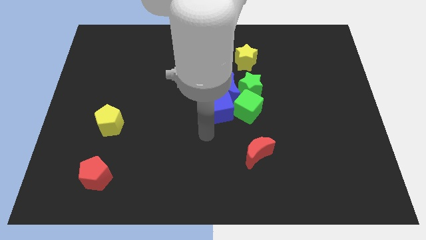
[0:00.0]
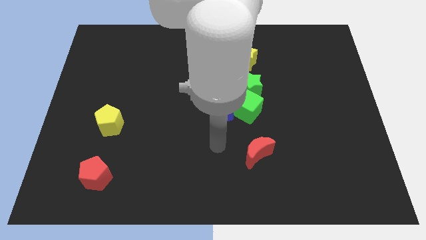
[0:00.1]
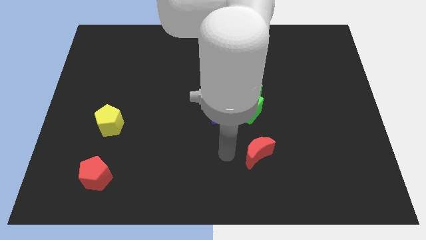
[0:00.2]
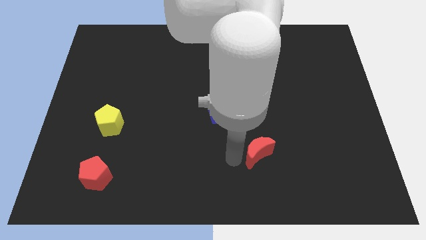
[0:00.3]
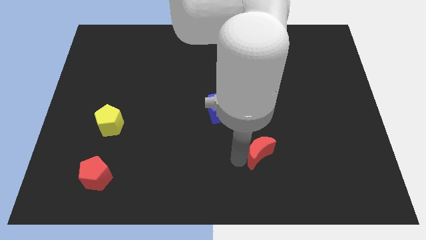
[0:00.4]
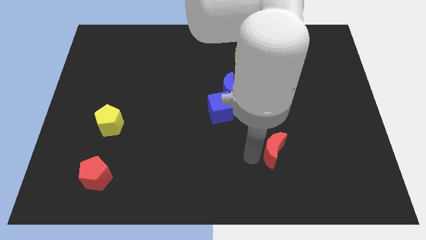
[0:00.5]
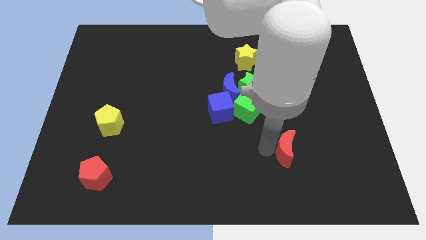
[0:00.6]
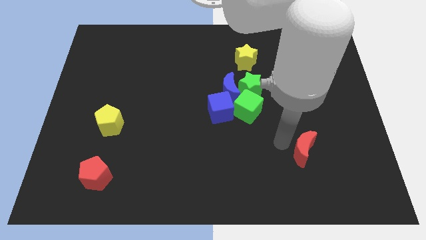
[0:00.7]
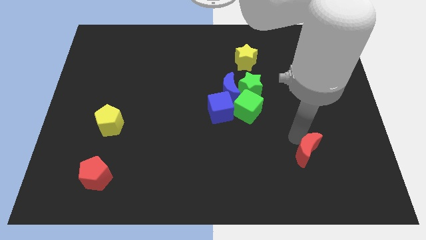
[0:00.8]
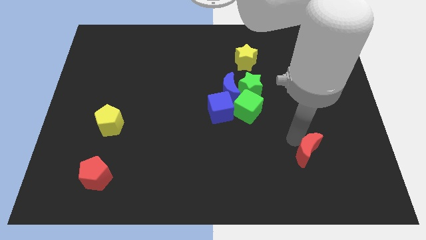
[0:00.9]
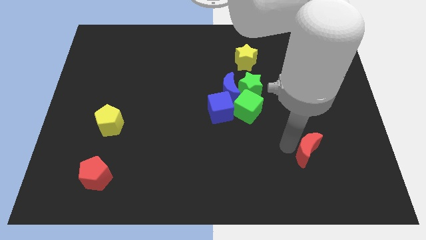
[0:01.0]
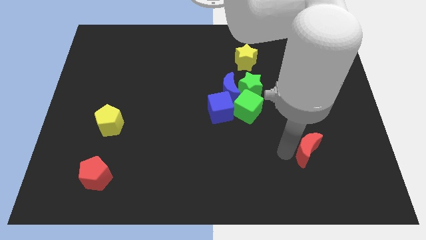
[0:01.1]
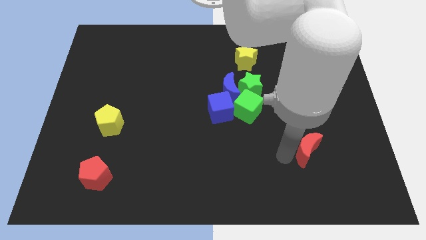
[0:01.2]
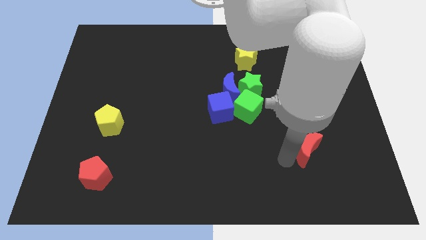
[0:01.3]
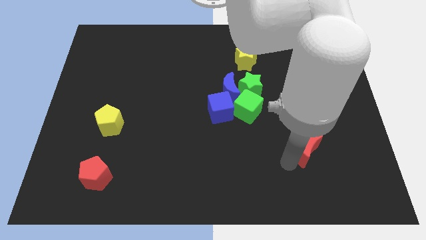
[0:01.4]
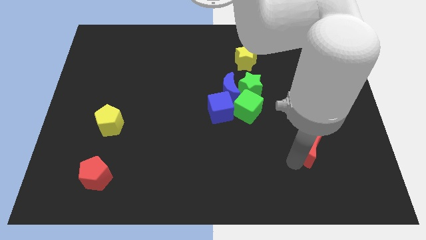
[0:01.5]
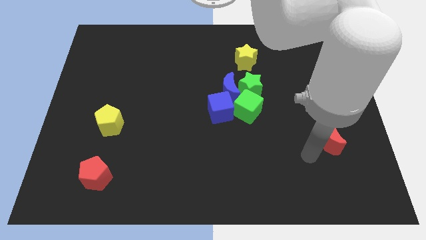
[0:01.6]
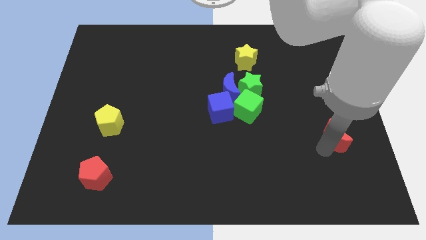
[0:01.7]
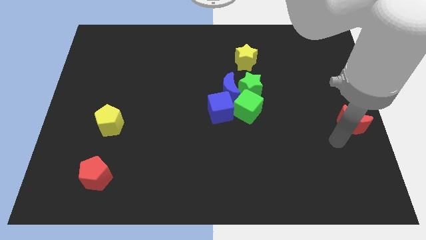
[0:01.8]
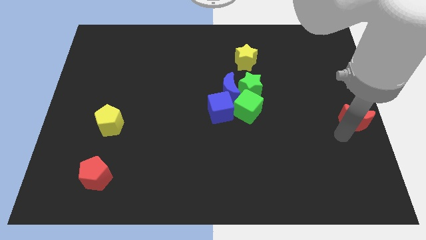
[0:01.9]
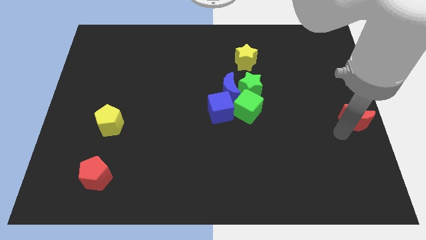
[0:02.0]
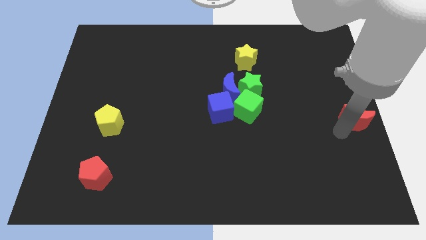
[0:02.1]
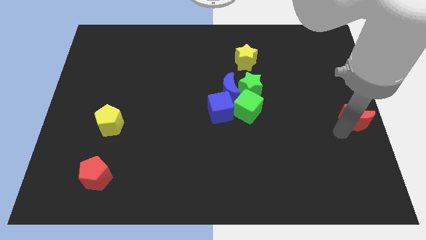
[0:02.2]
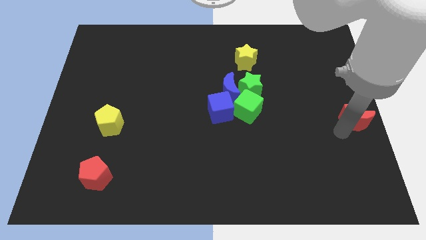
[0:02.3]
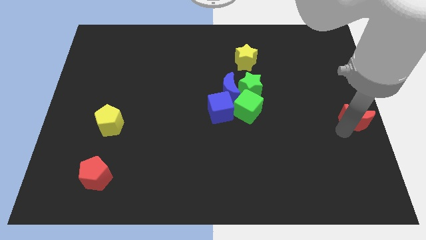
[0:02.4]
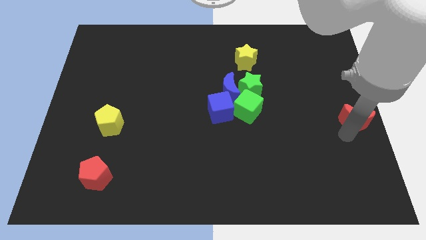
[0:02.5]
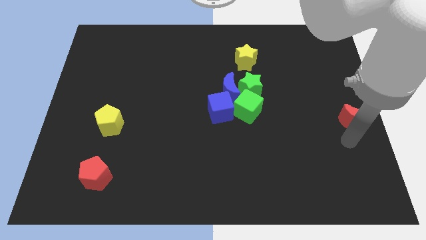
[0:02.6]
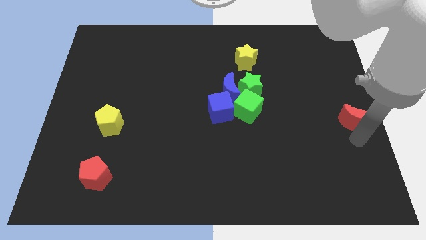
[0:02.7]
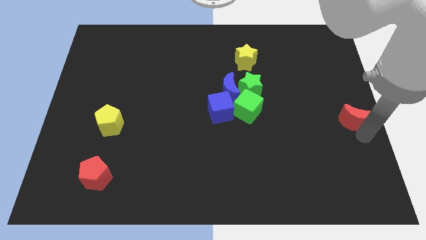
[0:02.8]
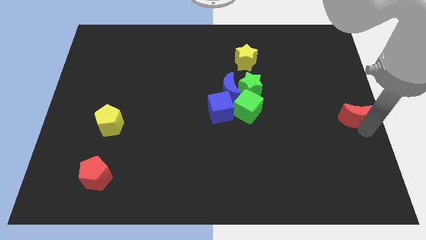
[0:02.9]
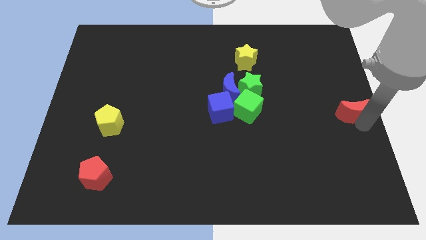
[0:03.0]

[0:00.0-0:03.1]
place the red crescent at the right centre of the board

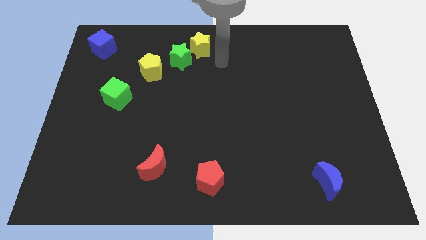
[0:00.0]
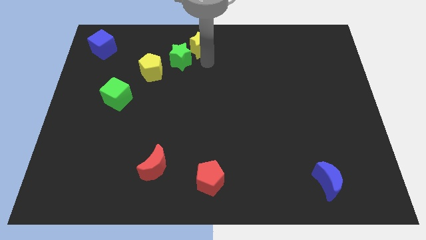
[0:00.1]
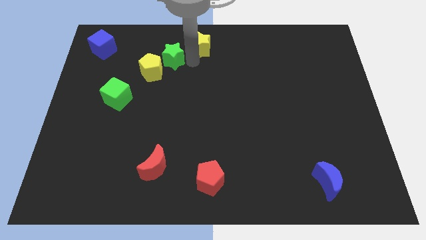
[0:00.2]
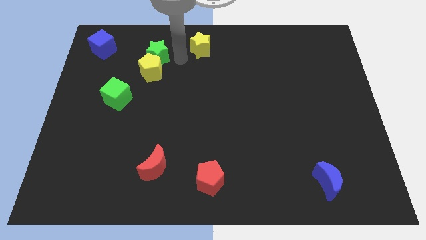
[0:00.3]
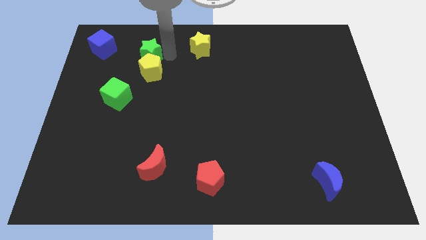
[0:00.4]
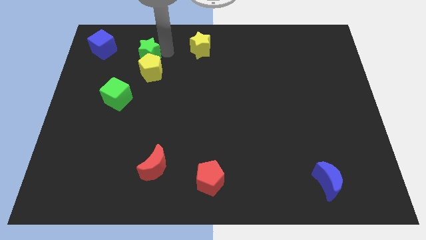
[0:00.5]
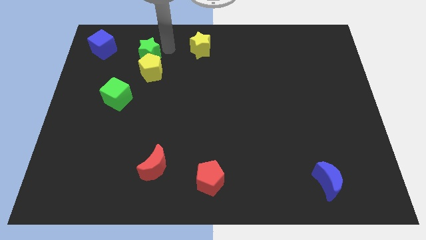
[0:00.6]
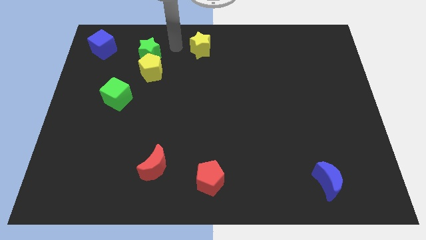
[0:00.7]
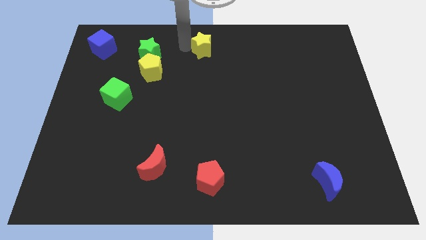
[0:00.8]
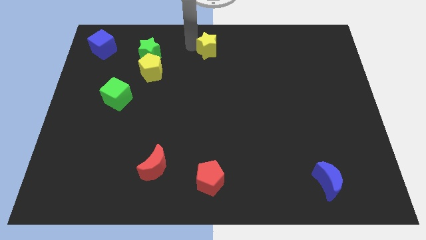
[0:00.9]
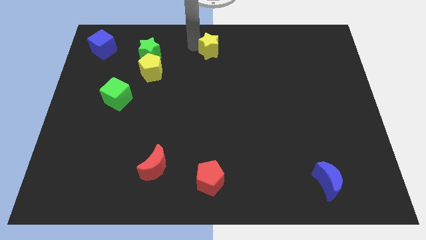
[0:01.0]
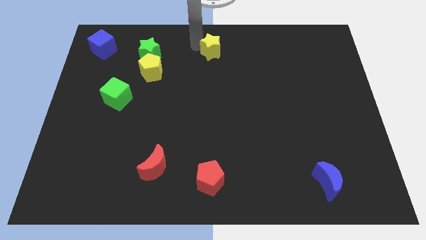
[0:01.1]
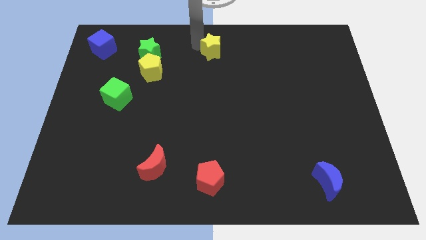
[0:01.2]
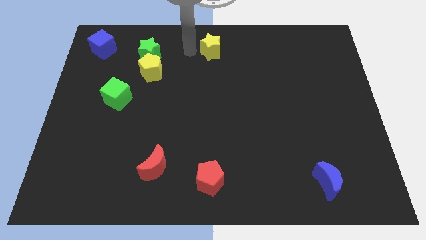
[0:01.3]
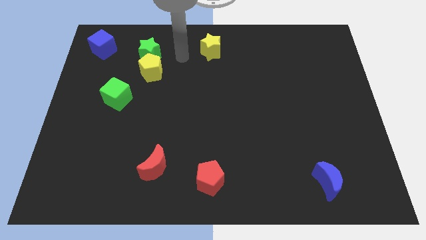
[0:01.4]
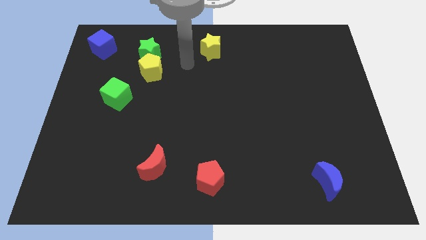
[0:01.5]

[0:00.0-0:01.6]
separate the green star and the yellow star

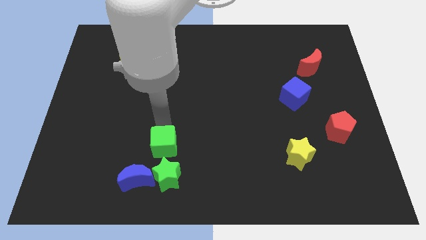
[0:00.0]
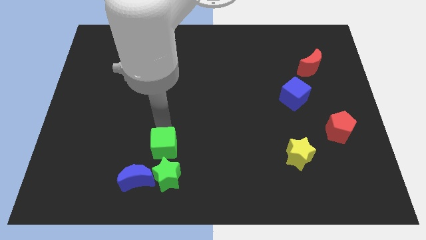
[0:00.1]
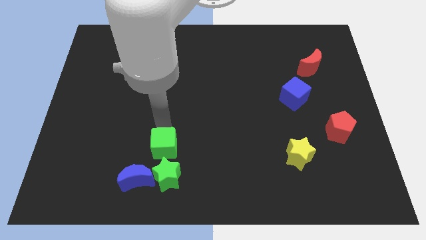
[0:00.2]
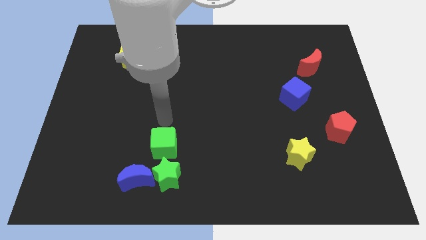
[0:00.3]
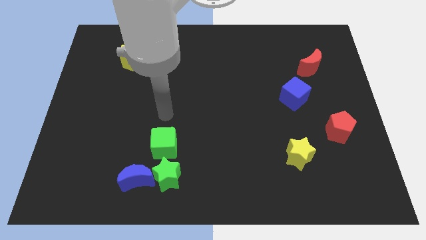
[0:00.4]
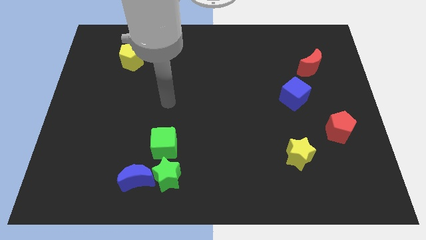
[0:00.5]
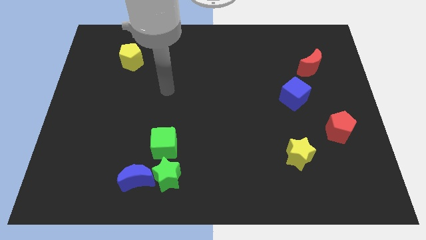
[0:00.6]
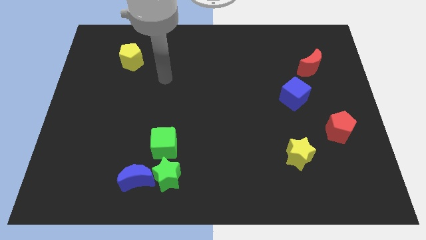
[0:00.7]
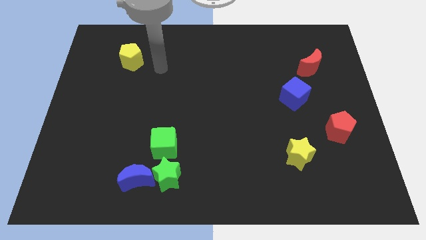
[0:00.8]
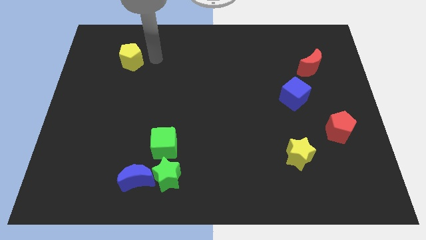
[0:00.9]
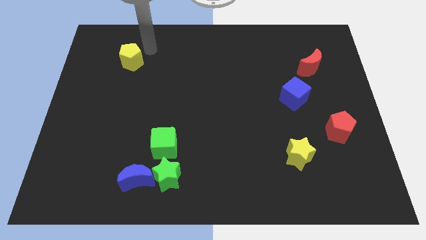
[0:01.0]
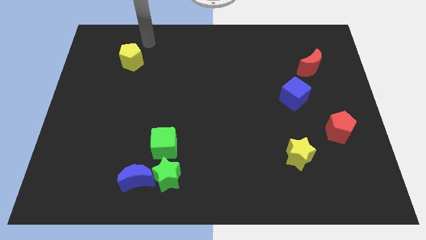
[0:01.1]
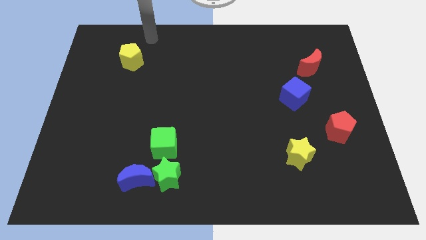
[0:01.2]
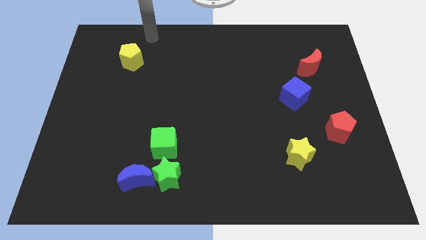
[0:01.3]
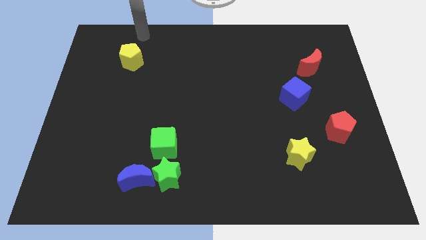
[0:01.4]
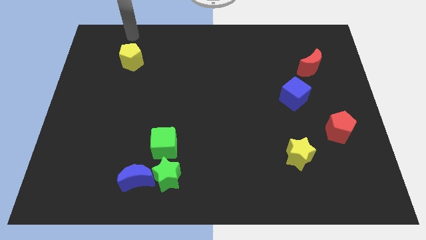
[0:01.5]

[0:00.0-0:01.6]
place the arm above the yellow pentagon

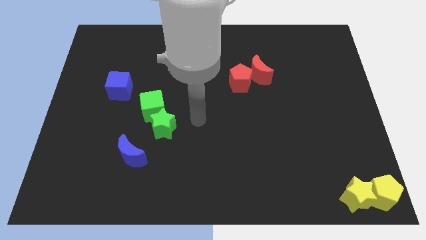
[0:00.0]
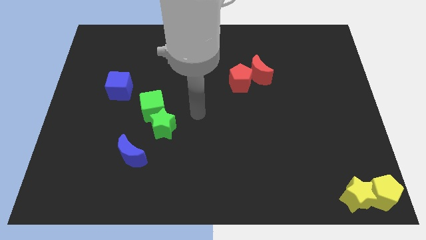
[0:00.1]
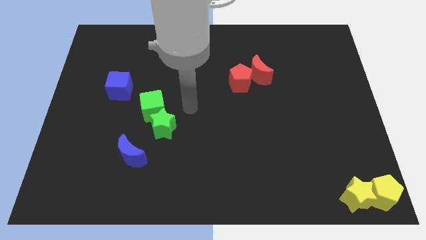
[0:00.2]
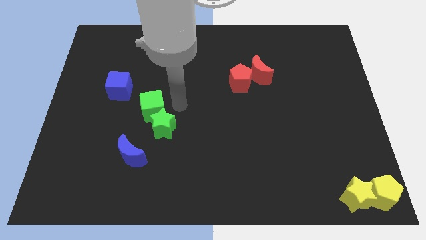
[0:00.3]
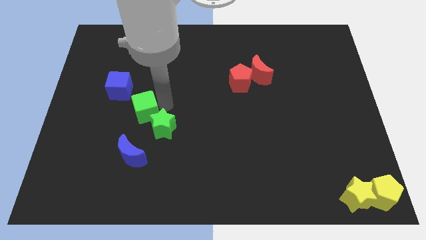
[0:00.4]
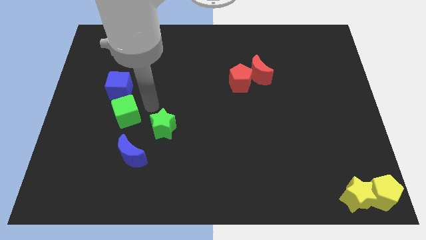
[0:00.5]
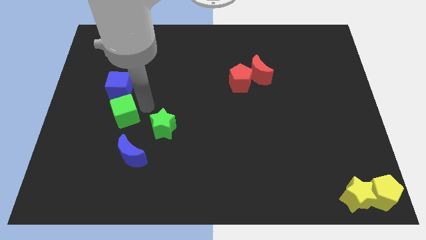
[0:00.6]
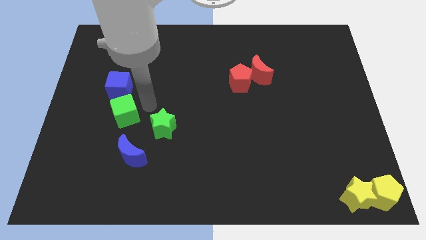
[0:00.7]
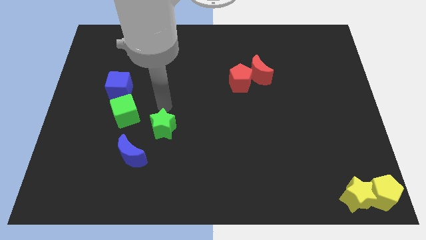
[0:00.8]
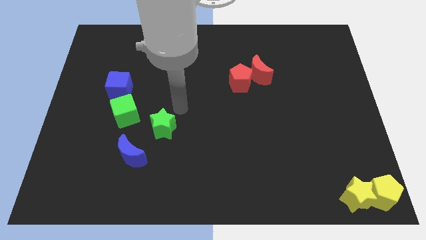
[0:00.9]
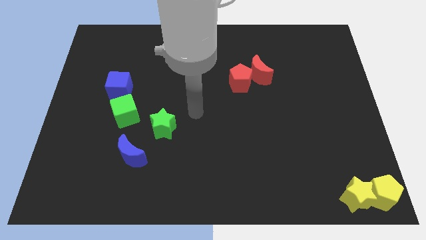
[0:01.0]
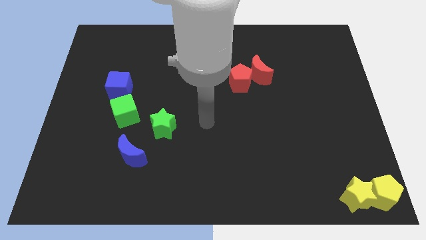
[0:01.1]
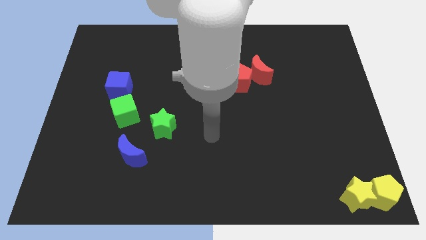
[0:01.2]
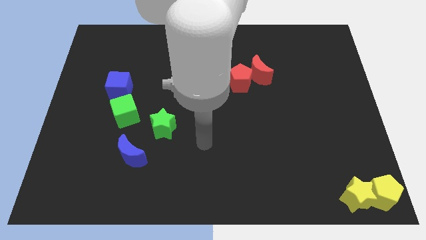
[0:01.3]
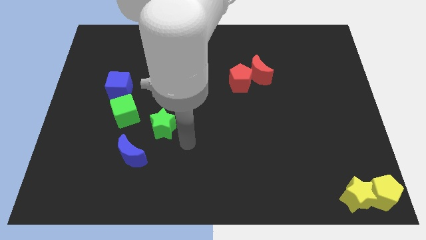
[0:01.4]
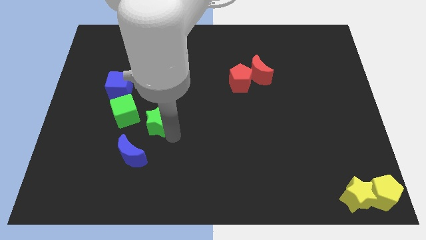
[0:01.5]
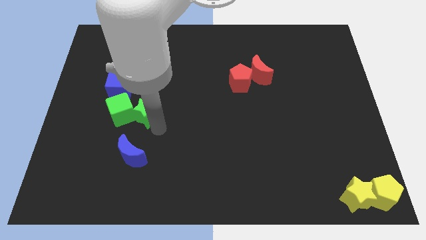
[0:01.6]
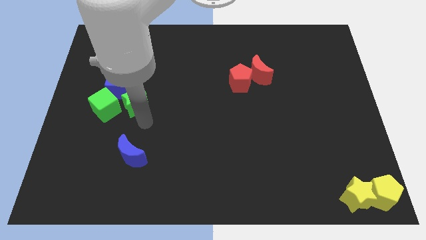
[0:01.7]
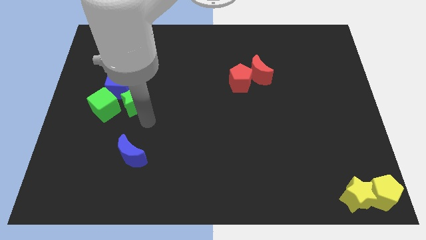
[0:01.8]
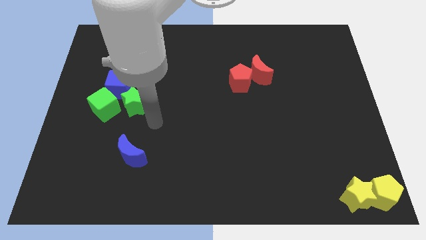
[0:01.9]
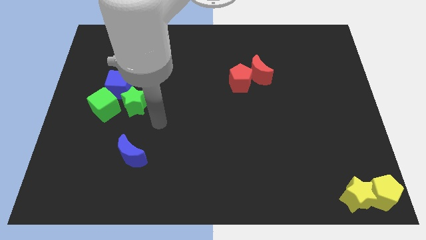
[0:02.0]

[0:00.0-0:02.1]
place the green blocks below the blue cube

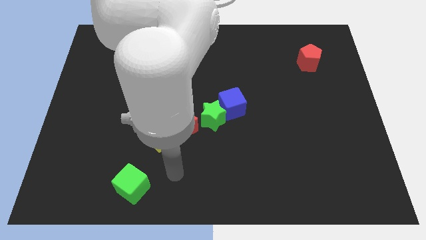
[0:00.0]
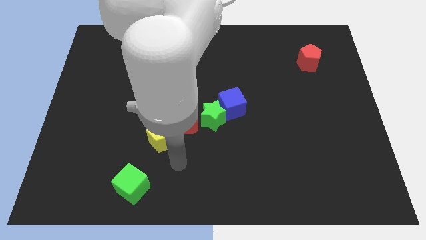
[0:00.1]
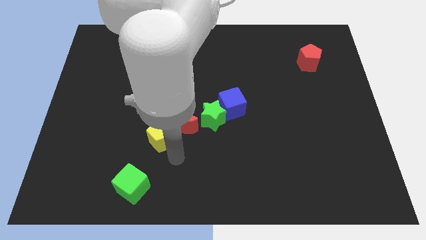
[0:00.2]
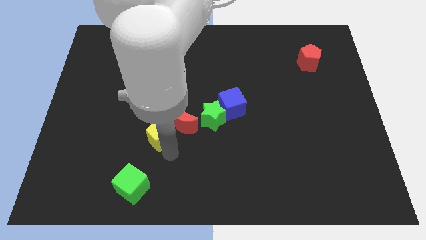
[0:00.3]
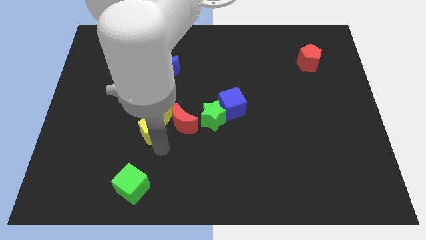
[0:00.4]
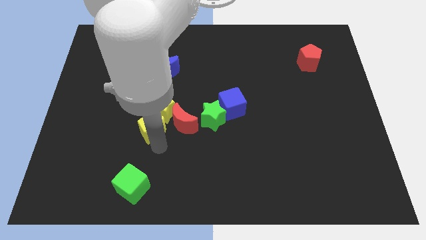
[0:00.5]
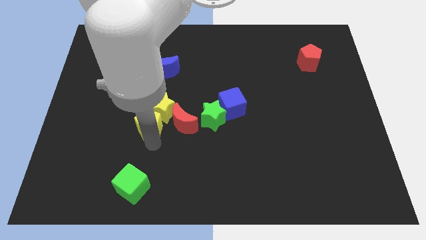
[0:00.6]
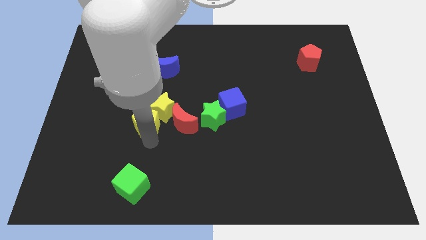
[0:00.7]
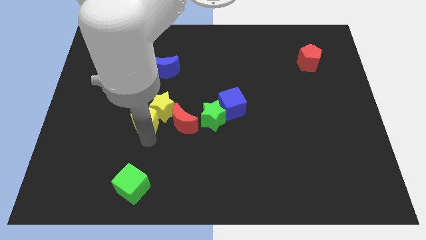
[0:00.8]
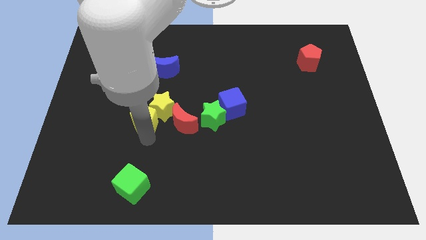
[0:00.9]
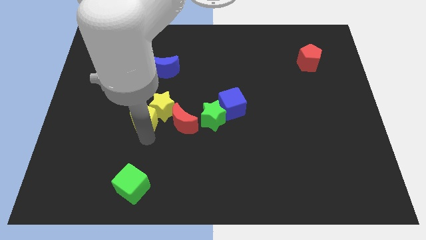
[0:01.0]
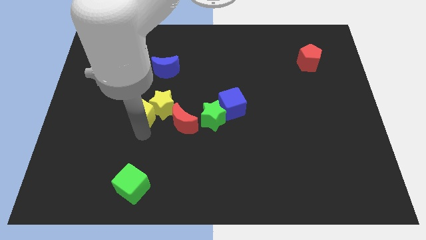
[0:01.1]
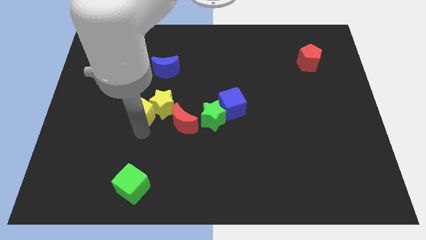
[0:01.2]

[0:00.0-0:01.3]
push the yellow pentagon into the yellow star
